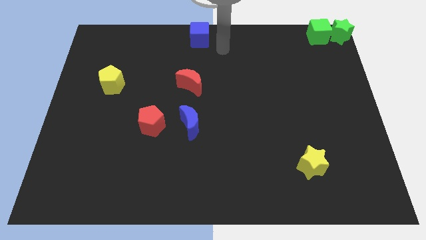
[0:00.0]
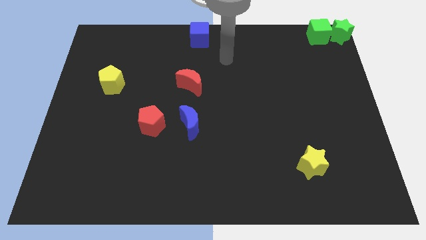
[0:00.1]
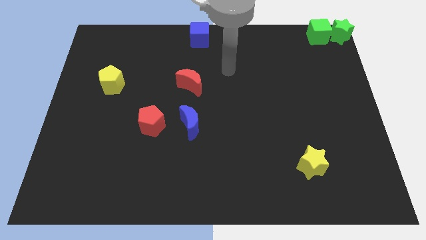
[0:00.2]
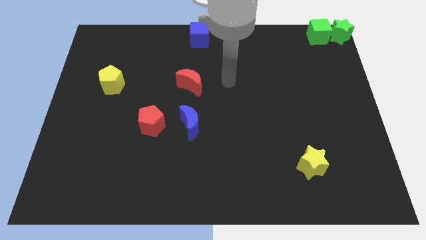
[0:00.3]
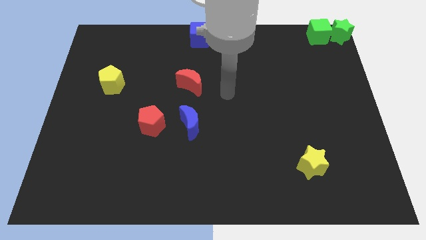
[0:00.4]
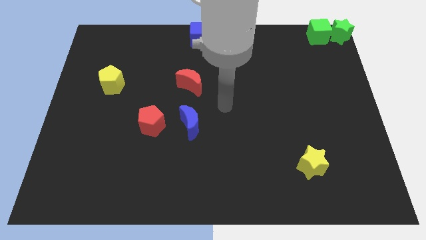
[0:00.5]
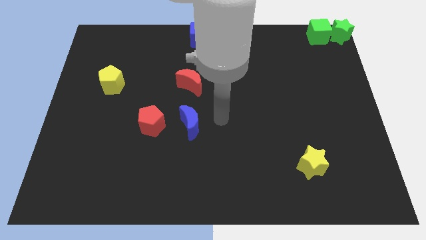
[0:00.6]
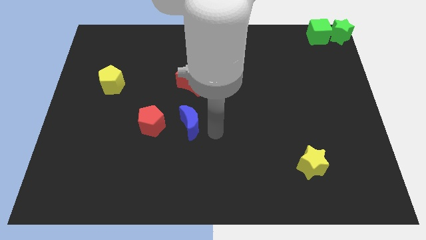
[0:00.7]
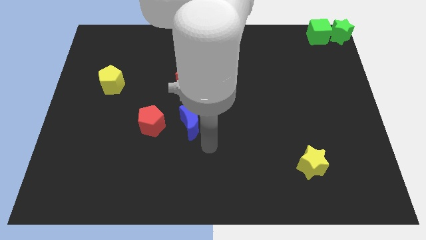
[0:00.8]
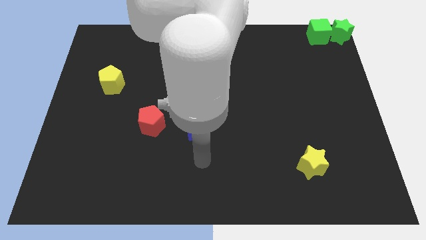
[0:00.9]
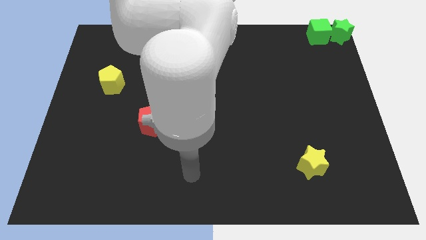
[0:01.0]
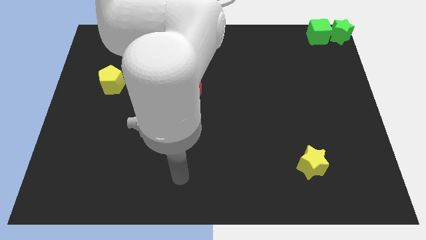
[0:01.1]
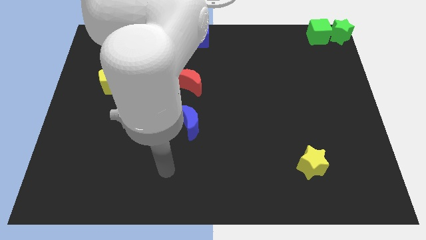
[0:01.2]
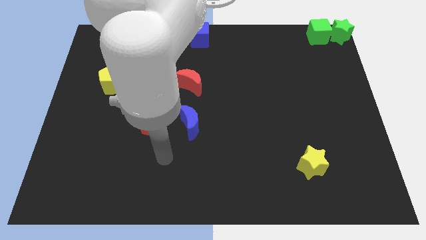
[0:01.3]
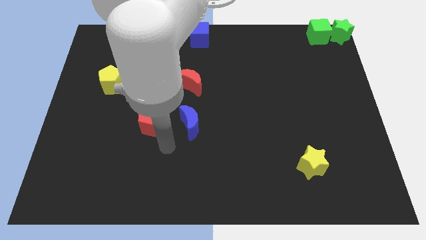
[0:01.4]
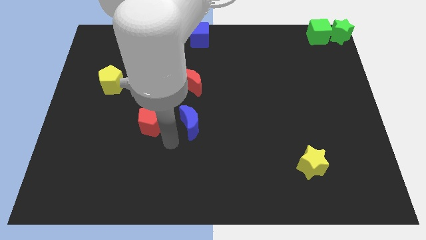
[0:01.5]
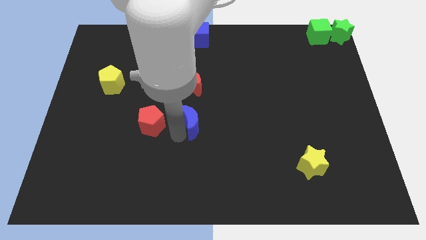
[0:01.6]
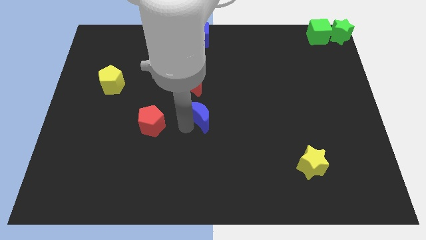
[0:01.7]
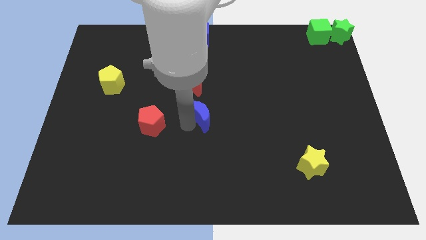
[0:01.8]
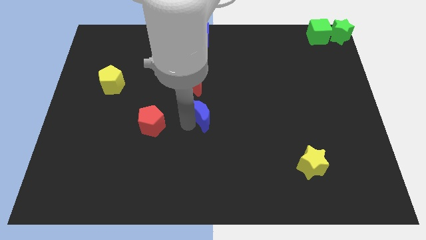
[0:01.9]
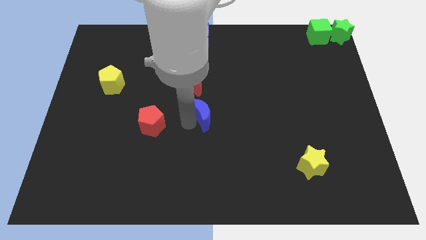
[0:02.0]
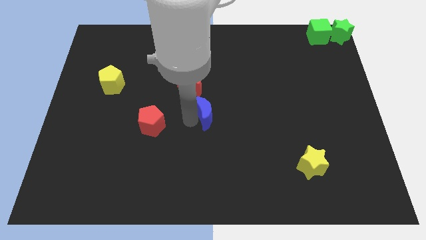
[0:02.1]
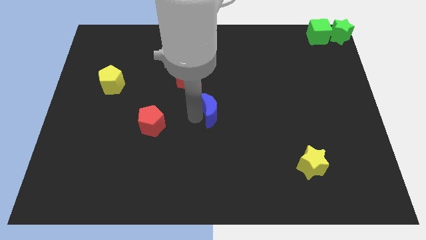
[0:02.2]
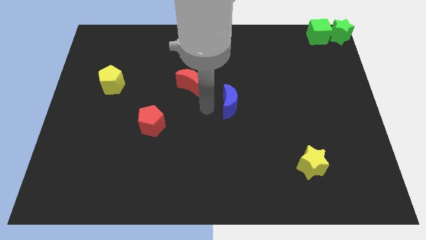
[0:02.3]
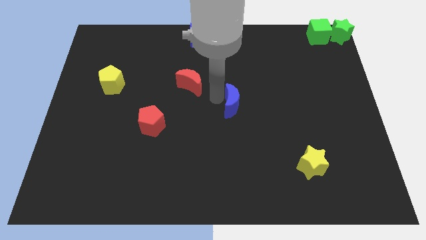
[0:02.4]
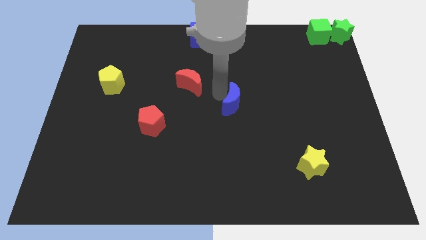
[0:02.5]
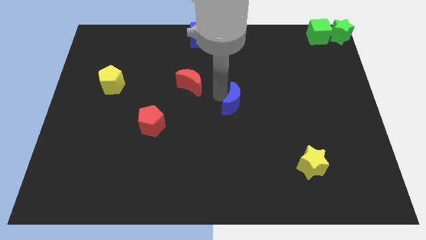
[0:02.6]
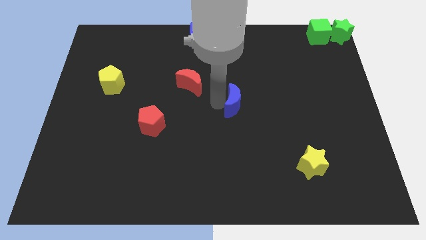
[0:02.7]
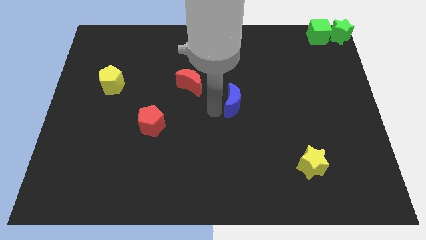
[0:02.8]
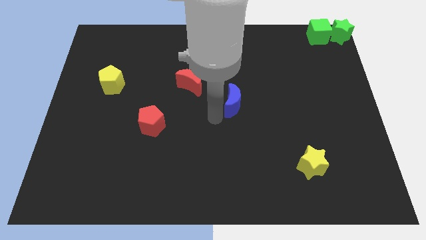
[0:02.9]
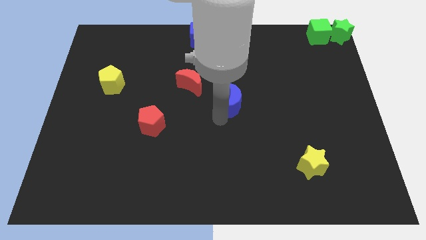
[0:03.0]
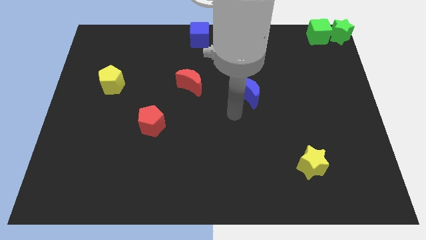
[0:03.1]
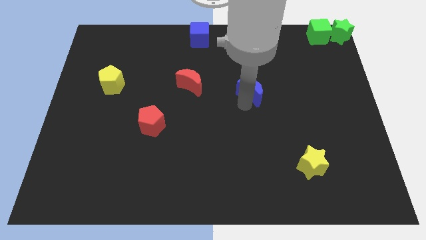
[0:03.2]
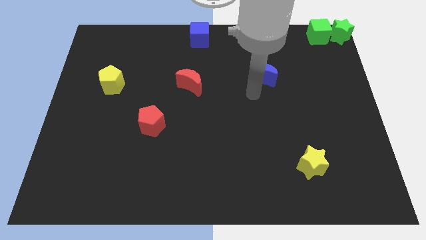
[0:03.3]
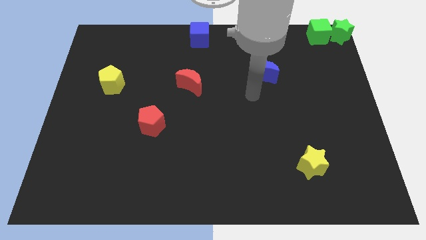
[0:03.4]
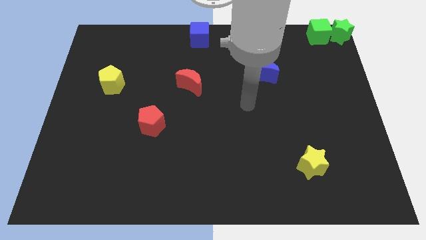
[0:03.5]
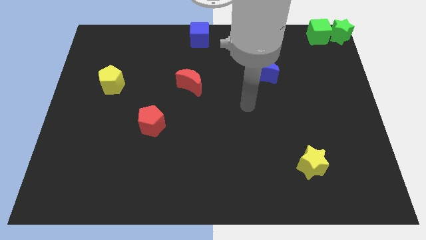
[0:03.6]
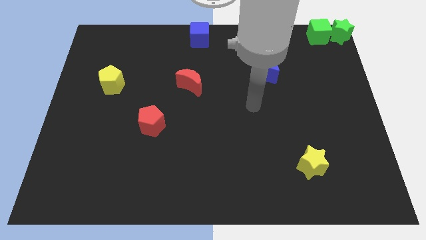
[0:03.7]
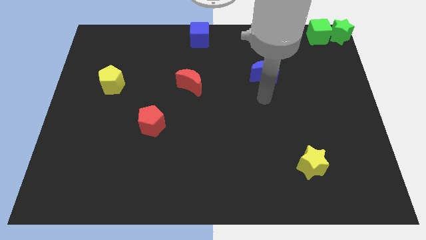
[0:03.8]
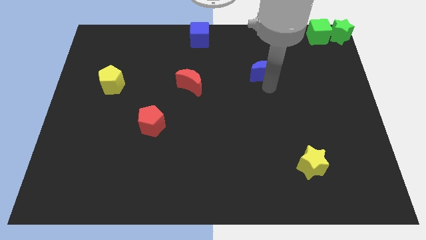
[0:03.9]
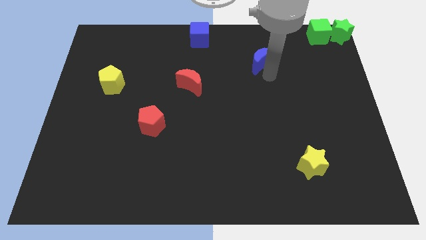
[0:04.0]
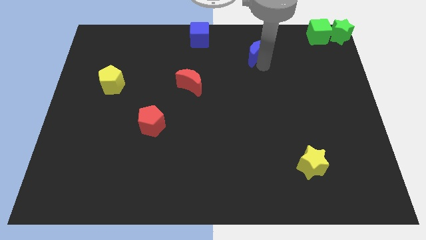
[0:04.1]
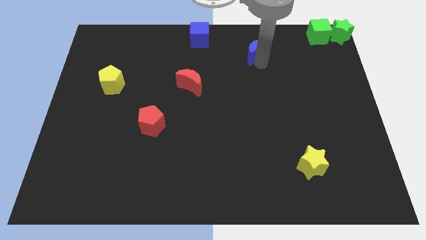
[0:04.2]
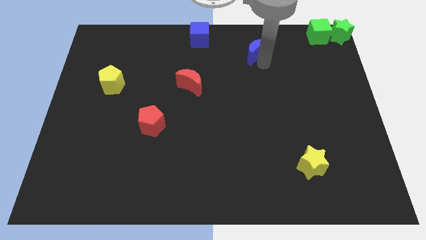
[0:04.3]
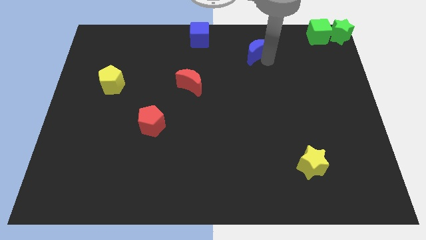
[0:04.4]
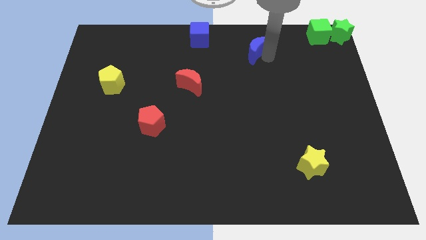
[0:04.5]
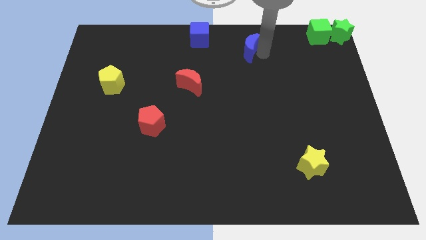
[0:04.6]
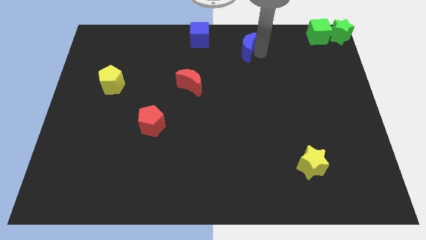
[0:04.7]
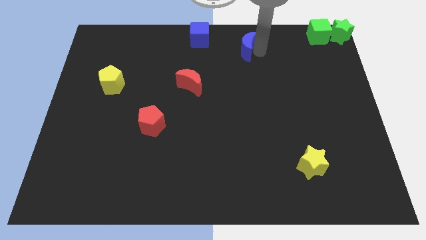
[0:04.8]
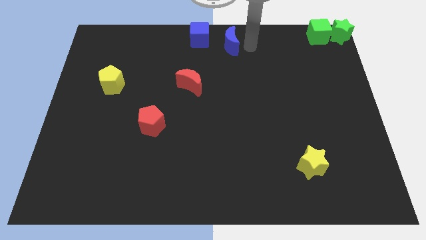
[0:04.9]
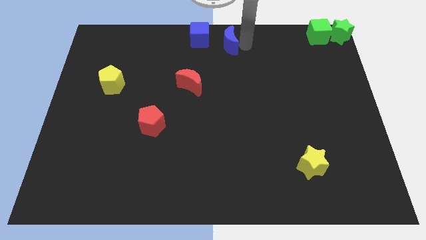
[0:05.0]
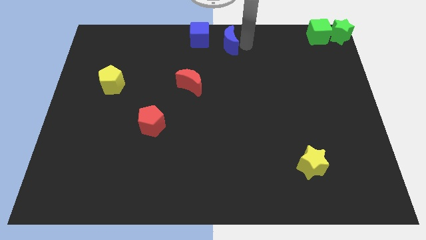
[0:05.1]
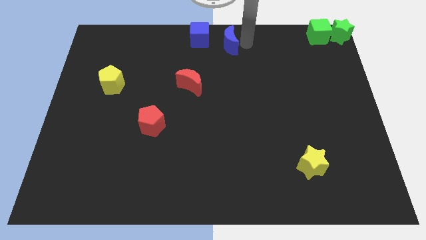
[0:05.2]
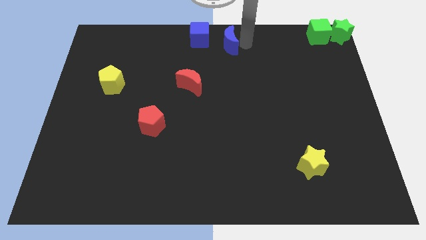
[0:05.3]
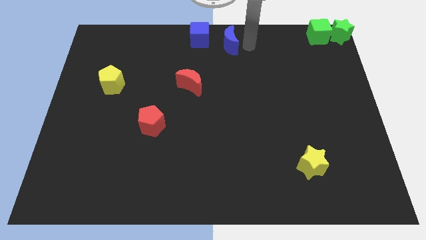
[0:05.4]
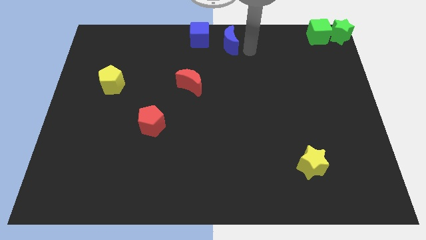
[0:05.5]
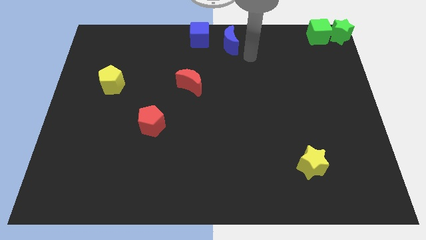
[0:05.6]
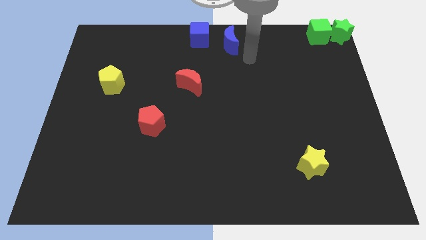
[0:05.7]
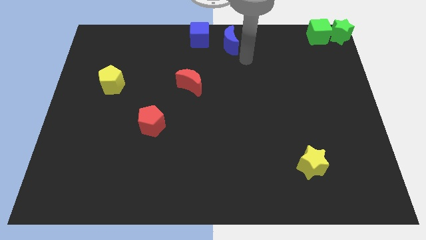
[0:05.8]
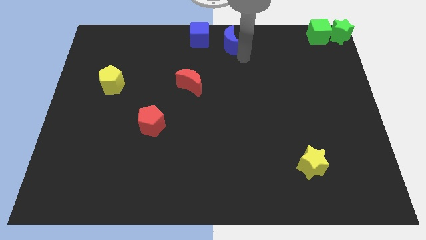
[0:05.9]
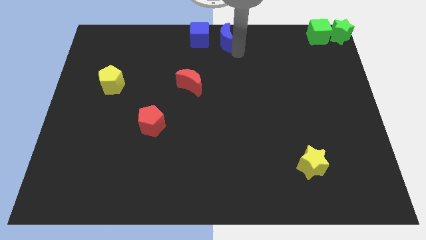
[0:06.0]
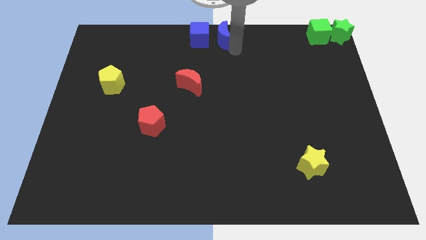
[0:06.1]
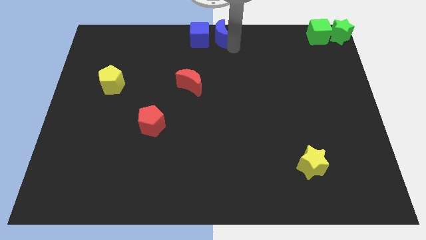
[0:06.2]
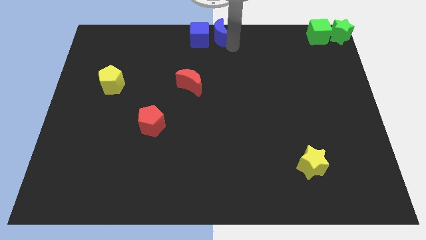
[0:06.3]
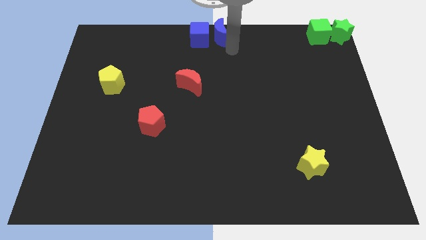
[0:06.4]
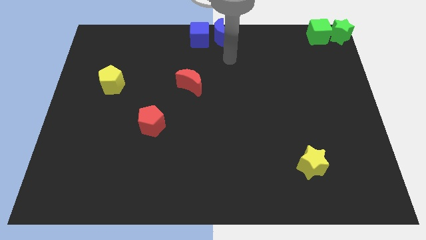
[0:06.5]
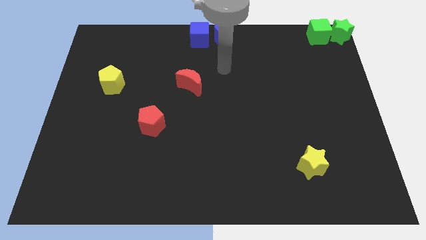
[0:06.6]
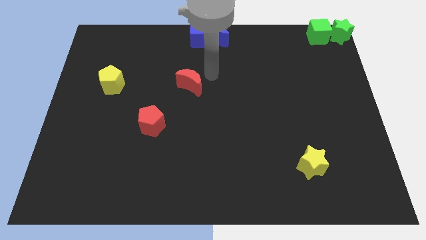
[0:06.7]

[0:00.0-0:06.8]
put the blue crescent adjacent to the blue cube

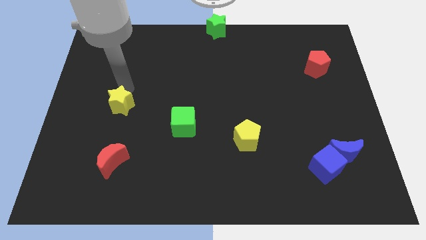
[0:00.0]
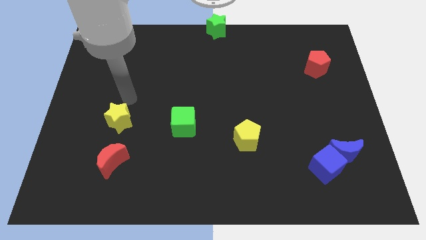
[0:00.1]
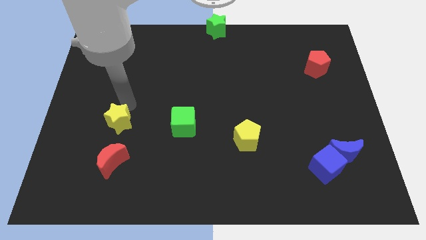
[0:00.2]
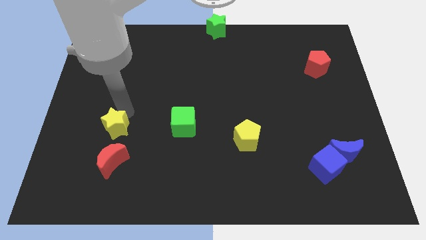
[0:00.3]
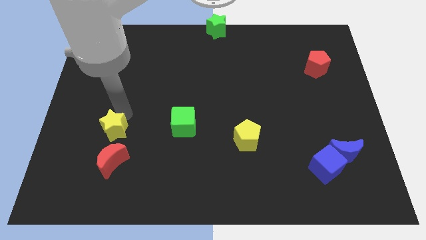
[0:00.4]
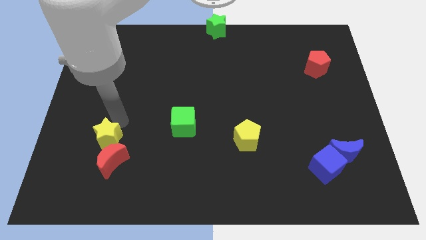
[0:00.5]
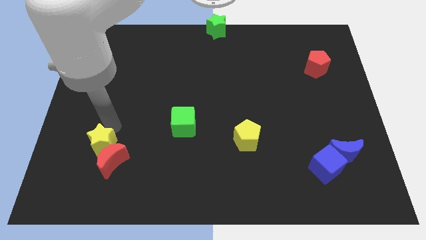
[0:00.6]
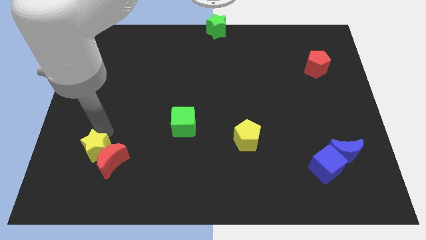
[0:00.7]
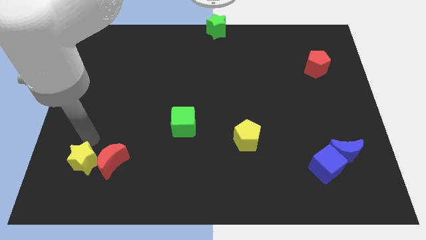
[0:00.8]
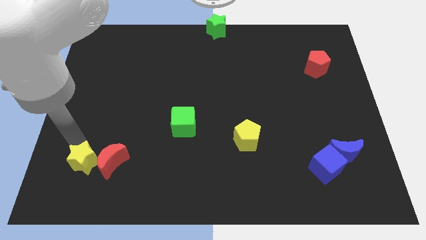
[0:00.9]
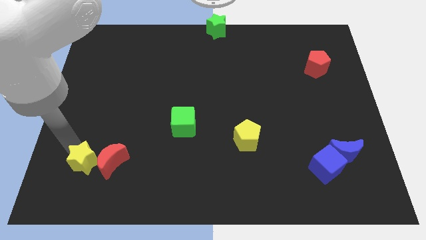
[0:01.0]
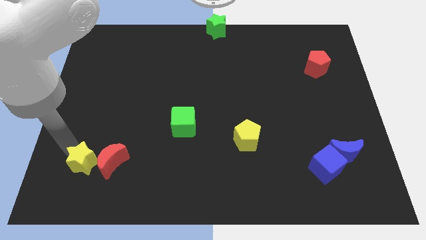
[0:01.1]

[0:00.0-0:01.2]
push the yellow star to the left of the red crescent

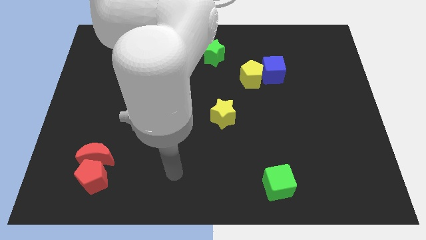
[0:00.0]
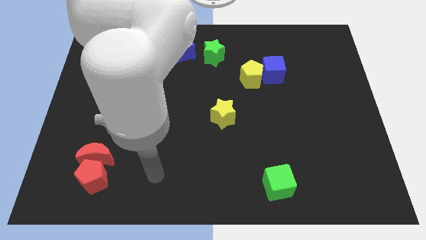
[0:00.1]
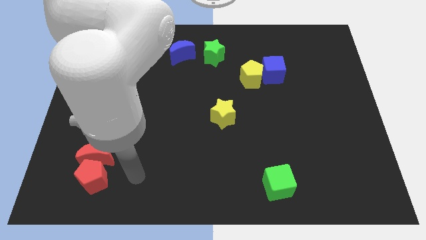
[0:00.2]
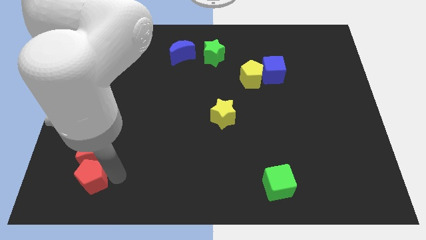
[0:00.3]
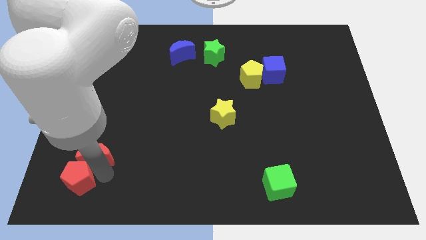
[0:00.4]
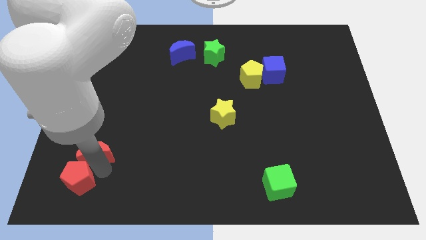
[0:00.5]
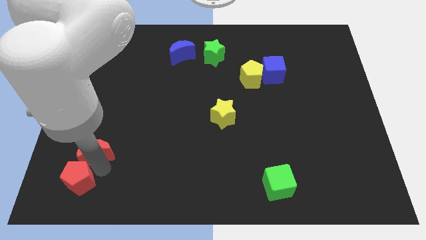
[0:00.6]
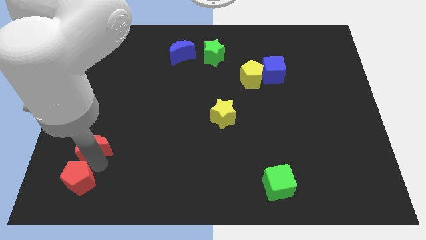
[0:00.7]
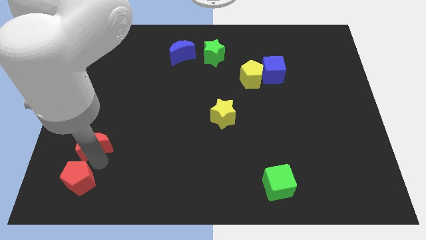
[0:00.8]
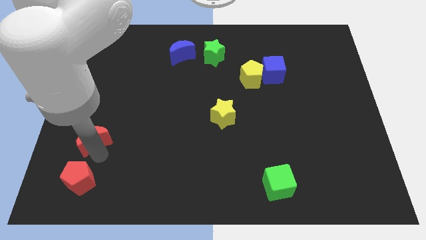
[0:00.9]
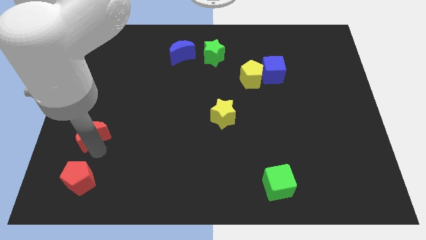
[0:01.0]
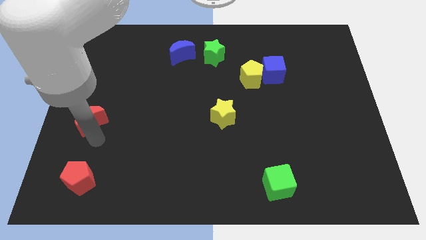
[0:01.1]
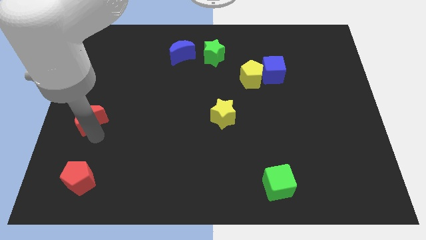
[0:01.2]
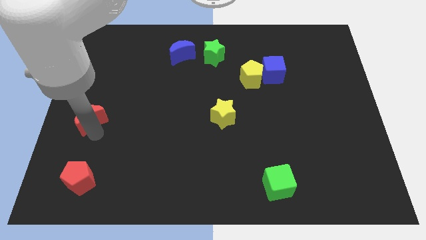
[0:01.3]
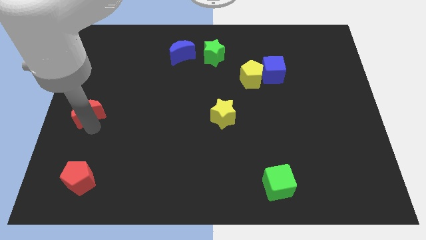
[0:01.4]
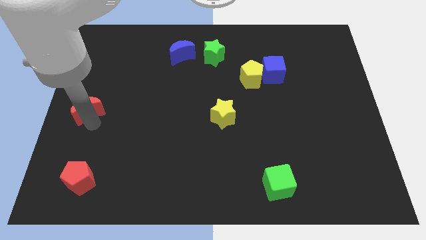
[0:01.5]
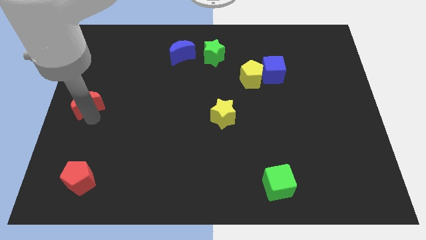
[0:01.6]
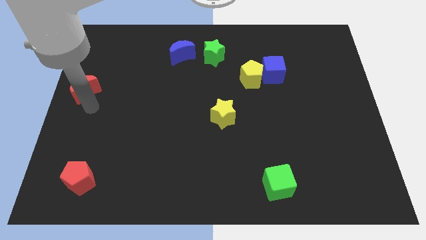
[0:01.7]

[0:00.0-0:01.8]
separate red moon from the red pentagon
